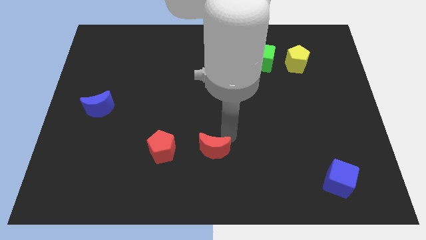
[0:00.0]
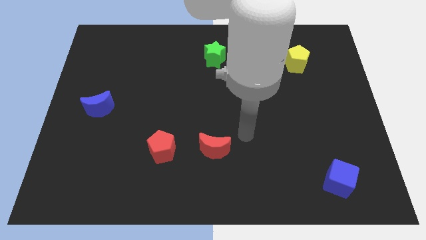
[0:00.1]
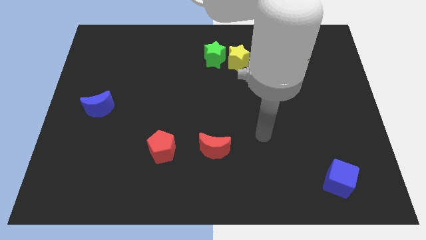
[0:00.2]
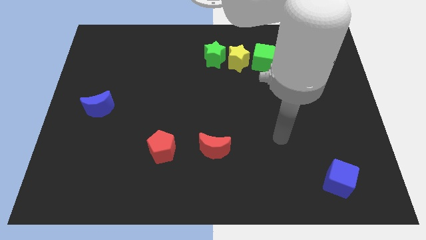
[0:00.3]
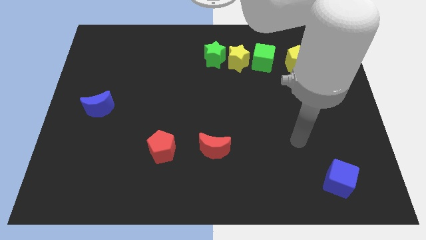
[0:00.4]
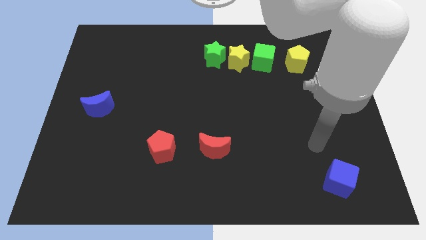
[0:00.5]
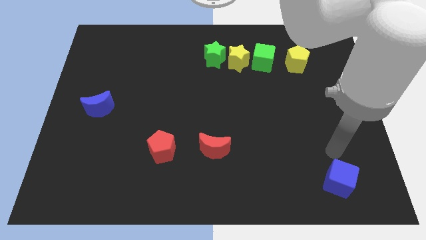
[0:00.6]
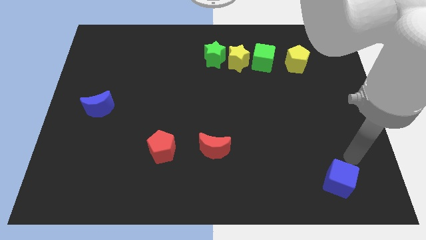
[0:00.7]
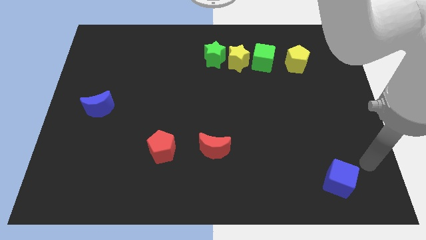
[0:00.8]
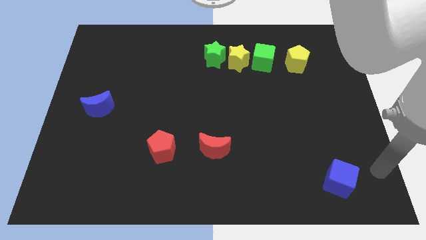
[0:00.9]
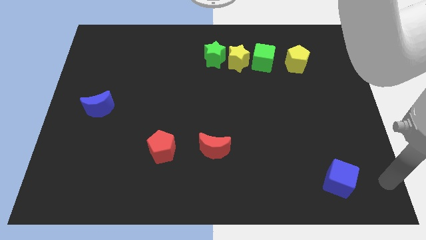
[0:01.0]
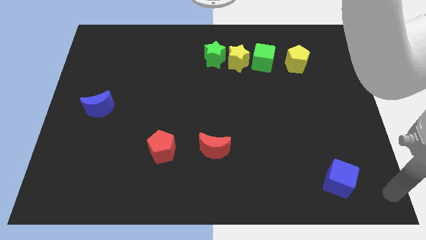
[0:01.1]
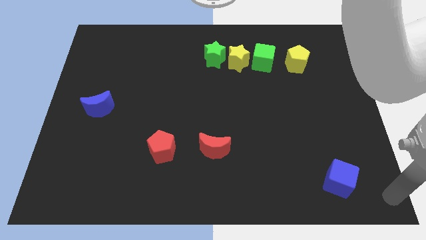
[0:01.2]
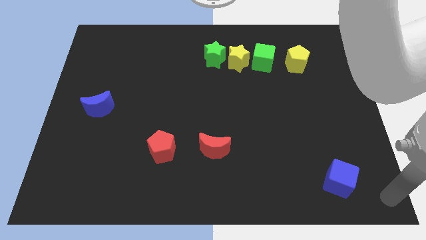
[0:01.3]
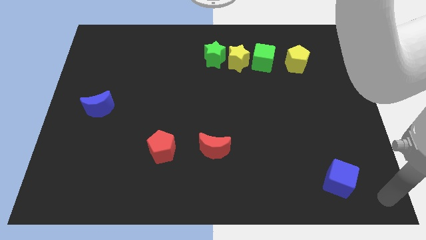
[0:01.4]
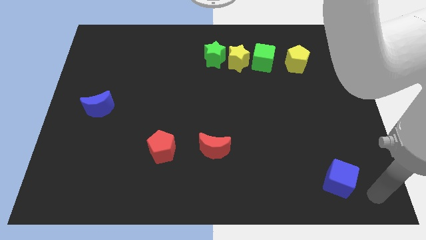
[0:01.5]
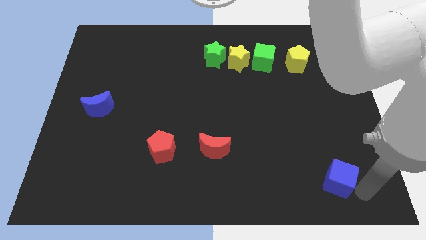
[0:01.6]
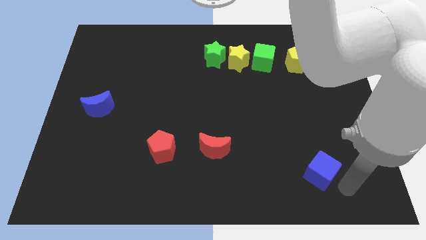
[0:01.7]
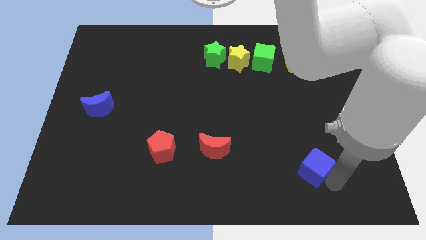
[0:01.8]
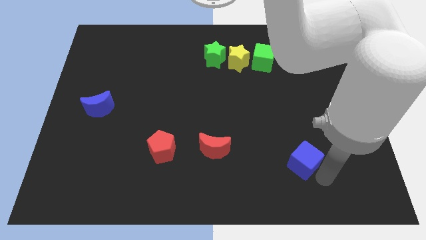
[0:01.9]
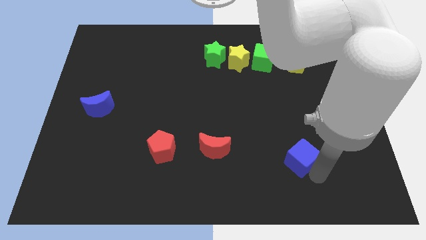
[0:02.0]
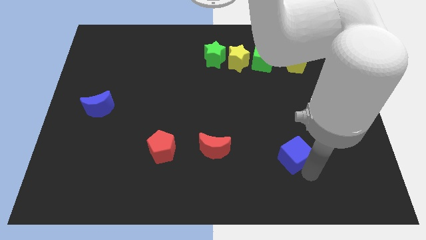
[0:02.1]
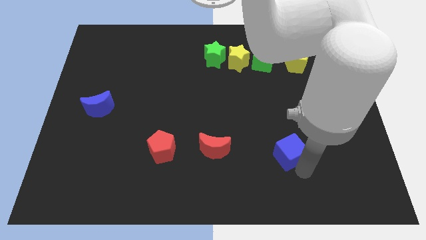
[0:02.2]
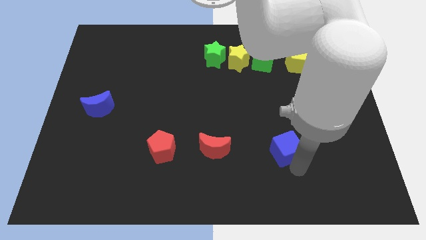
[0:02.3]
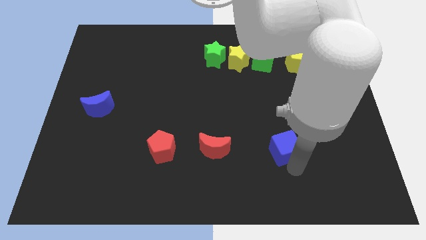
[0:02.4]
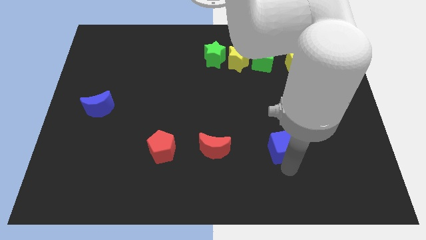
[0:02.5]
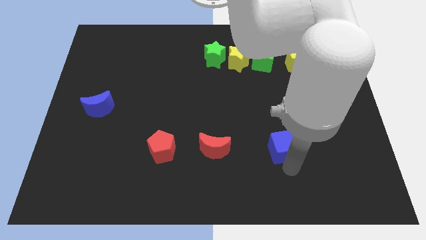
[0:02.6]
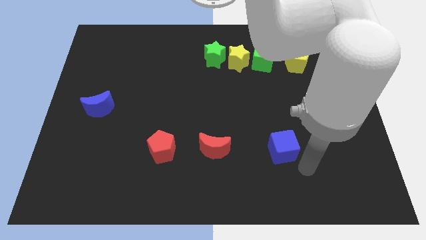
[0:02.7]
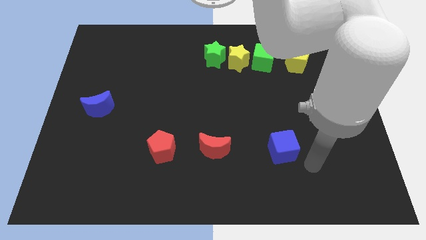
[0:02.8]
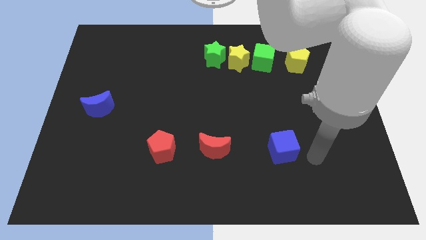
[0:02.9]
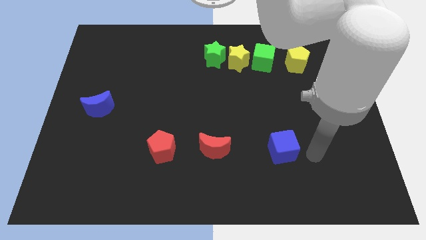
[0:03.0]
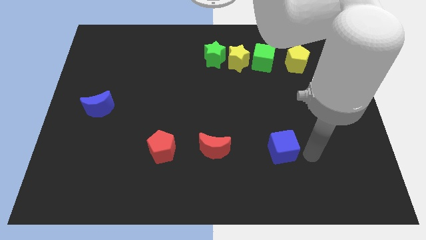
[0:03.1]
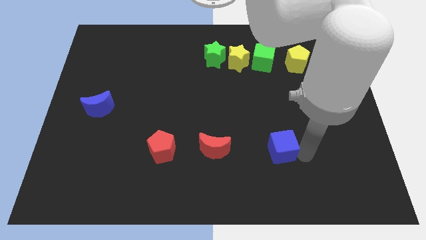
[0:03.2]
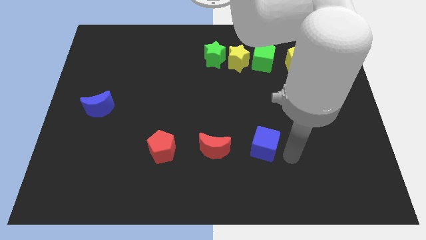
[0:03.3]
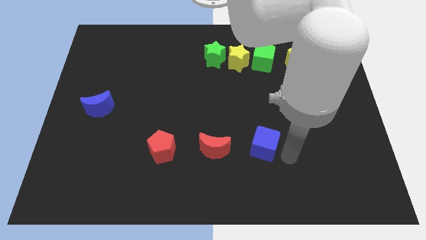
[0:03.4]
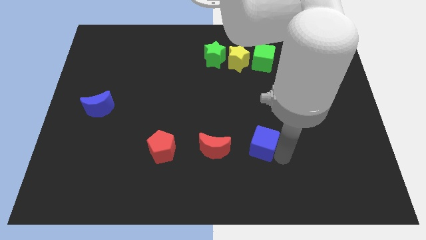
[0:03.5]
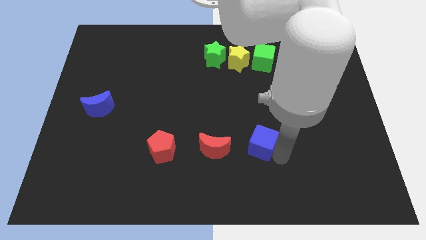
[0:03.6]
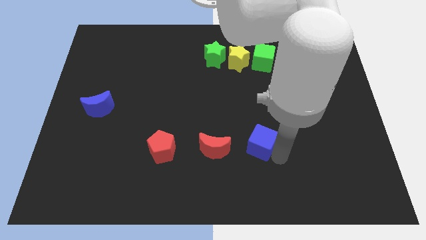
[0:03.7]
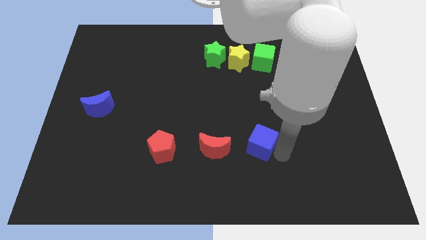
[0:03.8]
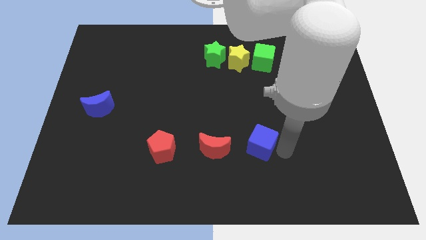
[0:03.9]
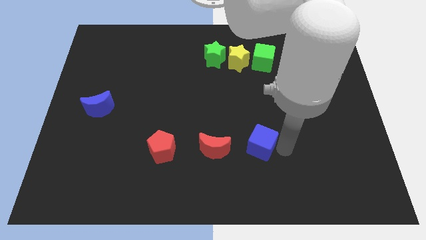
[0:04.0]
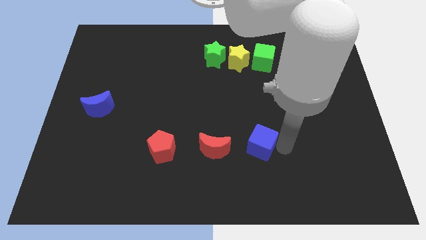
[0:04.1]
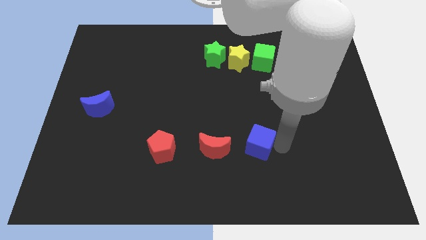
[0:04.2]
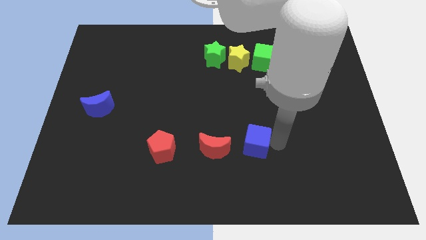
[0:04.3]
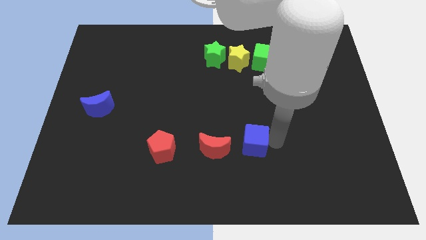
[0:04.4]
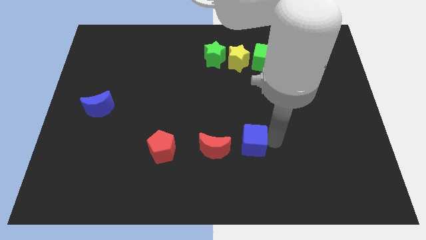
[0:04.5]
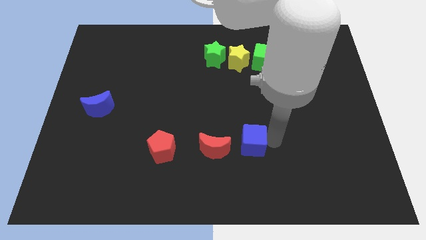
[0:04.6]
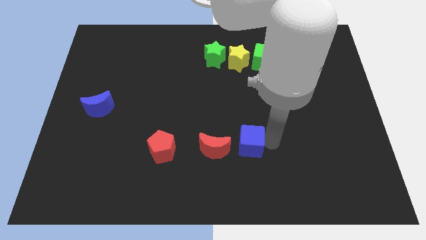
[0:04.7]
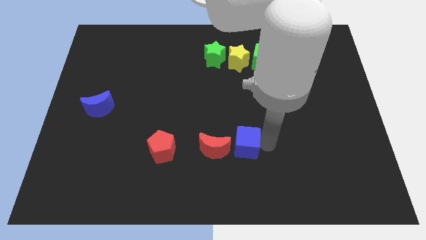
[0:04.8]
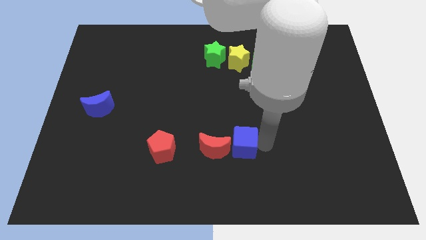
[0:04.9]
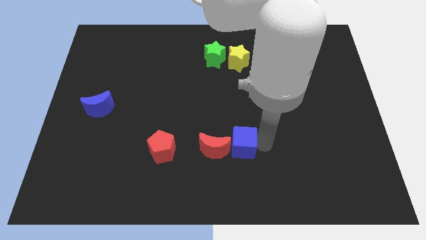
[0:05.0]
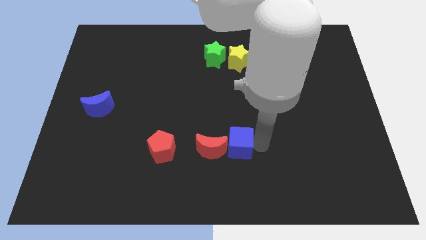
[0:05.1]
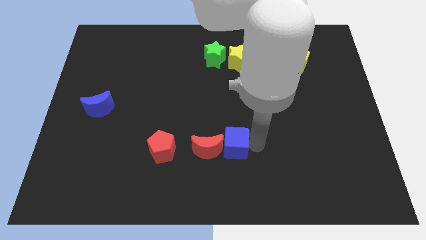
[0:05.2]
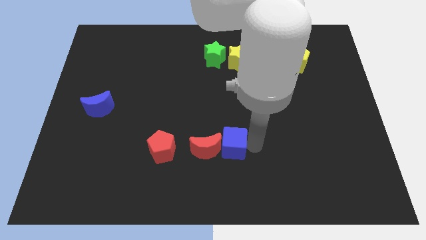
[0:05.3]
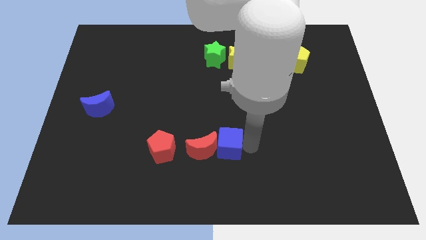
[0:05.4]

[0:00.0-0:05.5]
push the blue cube into the right side of the red moon

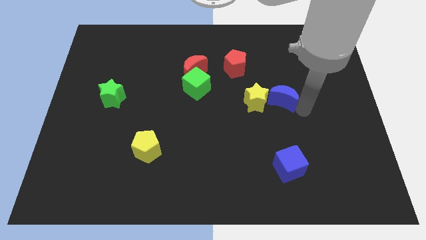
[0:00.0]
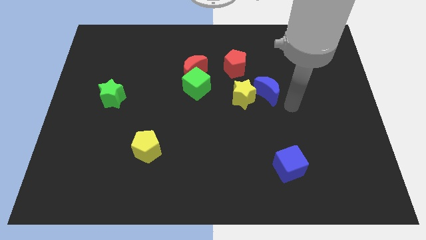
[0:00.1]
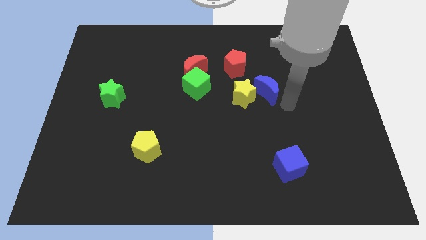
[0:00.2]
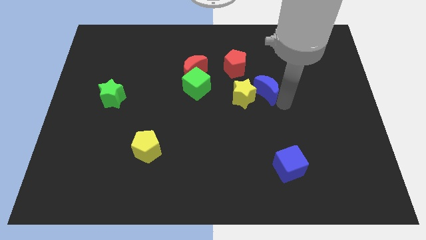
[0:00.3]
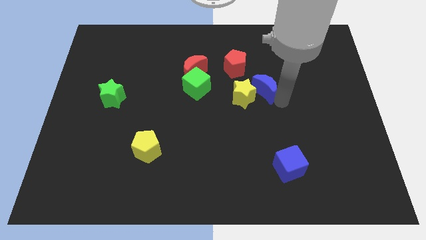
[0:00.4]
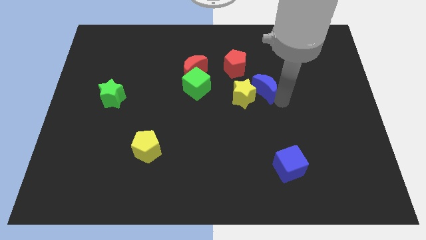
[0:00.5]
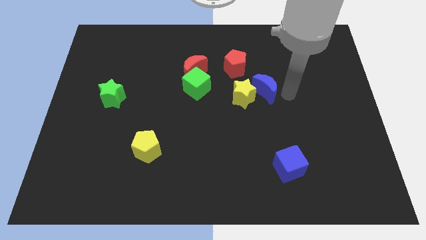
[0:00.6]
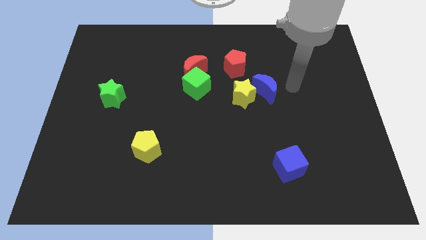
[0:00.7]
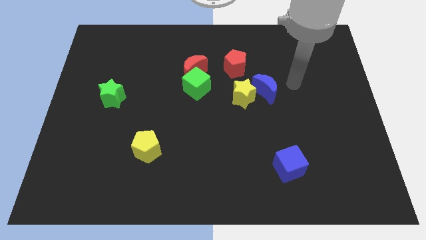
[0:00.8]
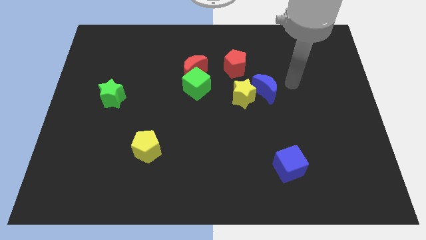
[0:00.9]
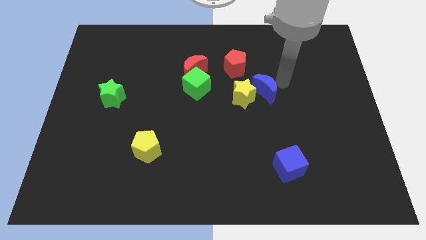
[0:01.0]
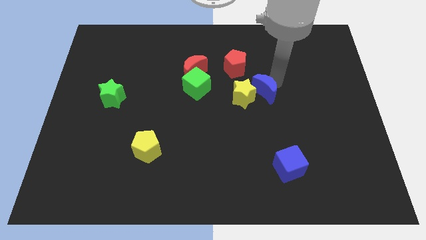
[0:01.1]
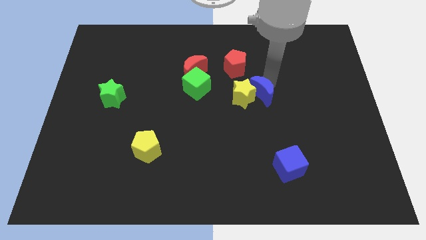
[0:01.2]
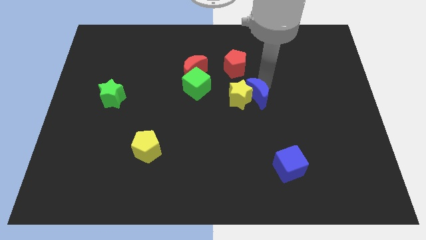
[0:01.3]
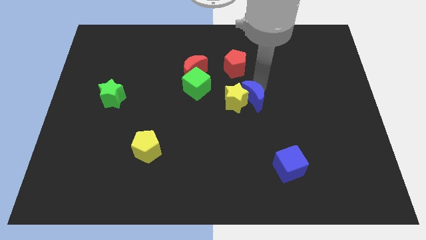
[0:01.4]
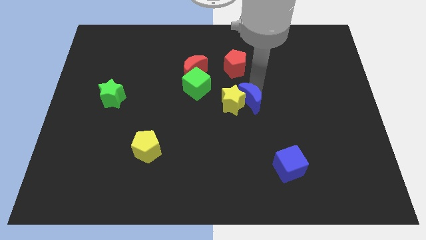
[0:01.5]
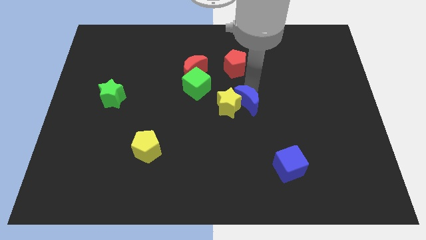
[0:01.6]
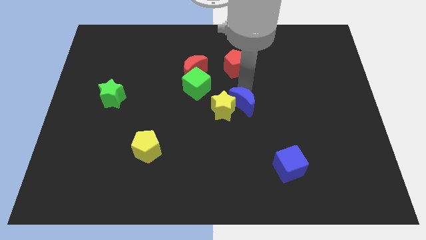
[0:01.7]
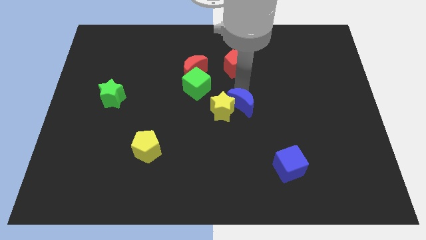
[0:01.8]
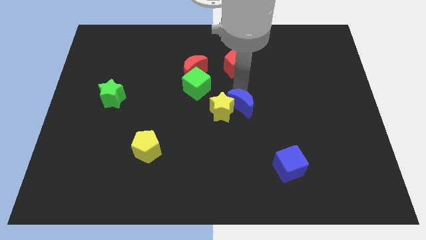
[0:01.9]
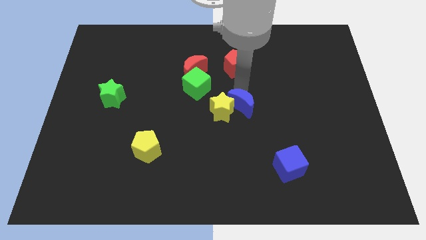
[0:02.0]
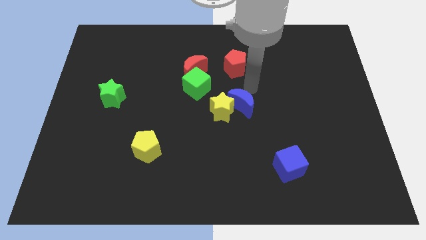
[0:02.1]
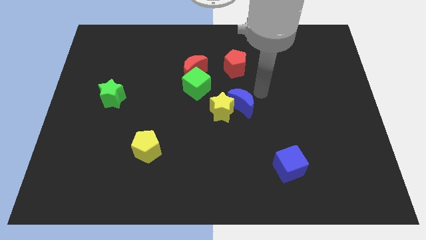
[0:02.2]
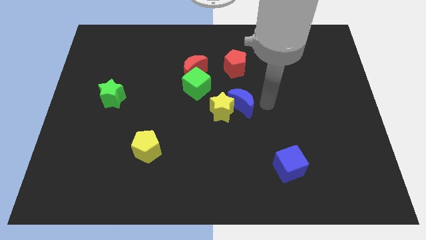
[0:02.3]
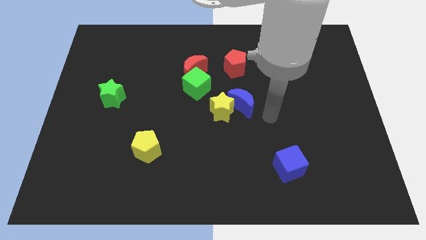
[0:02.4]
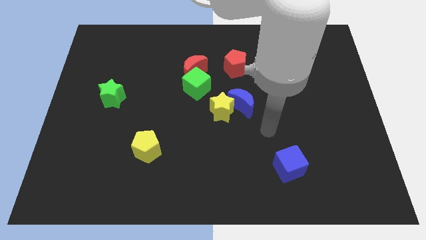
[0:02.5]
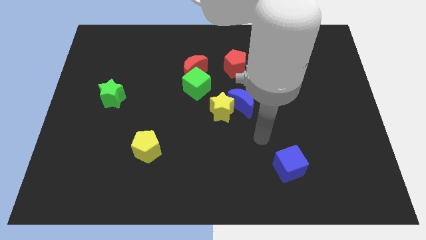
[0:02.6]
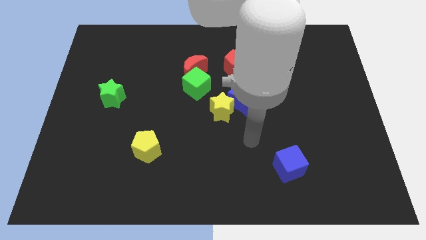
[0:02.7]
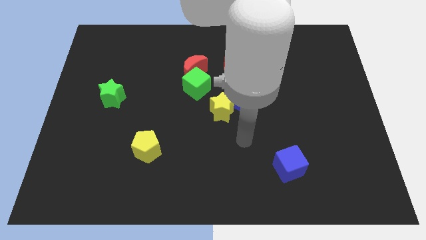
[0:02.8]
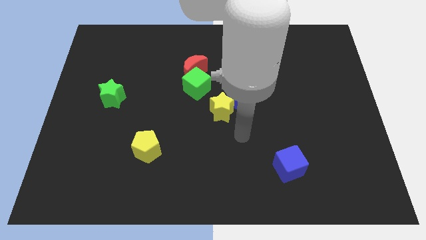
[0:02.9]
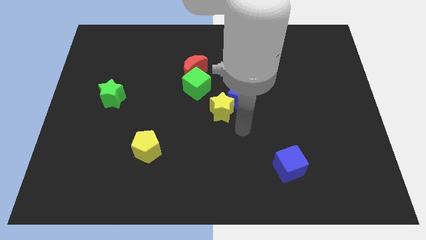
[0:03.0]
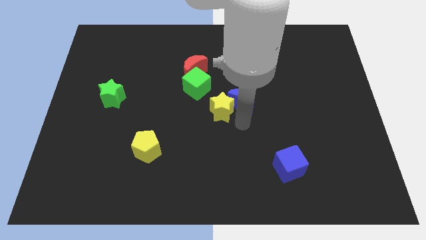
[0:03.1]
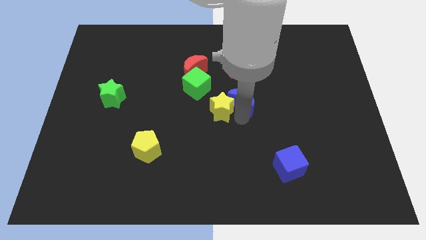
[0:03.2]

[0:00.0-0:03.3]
push the yellow star and blue moon to the center

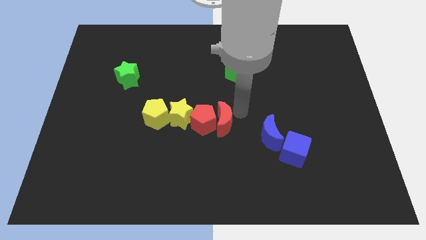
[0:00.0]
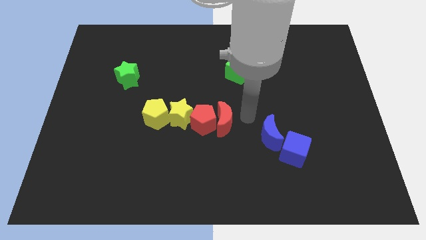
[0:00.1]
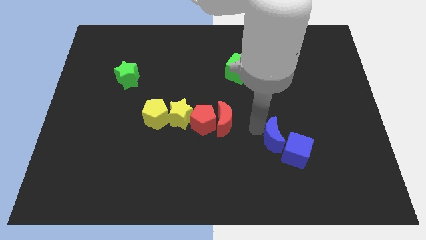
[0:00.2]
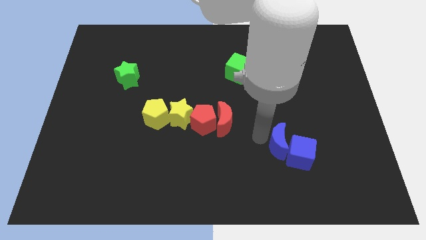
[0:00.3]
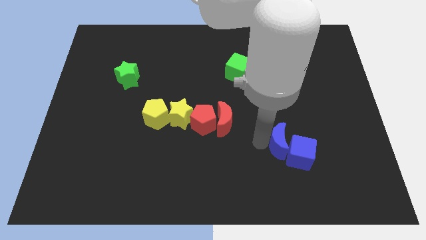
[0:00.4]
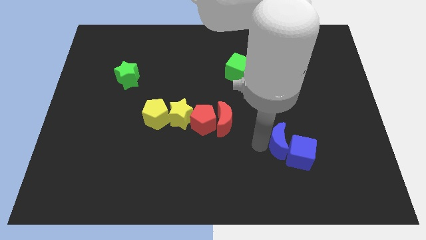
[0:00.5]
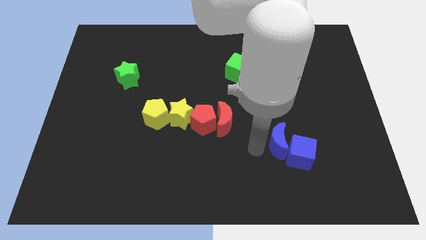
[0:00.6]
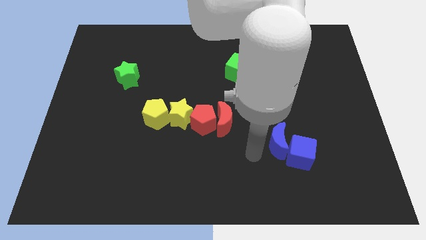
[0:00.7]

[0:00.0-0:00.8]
place your arm left to blue moon
